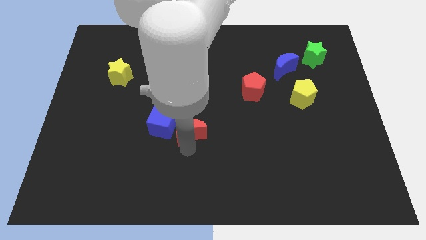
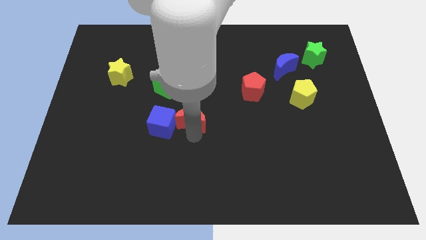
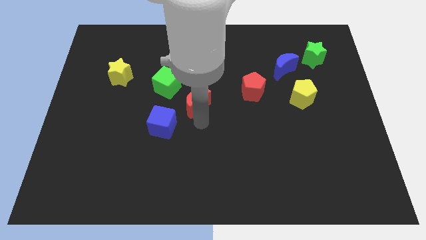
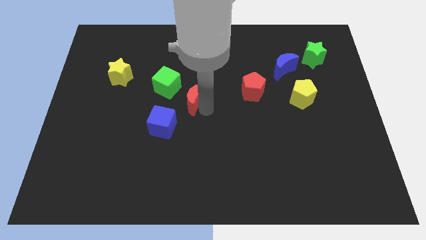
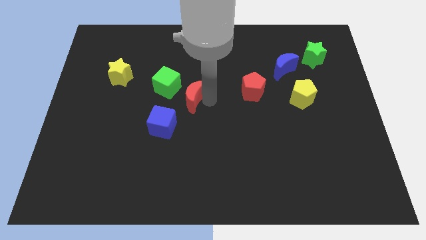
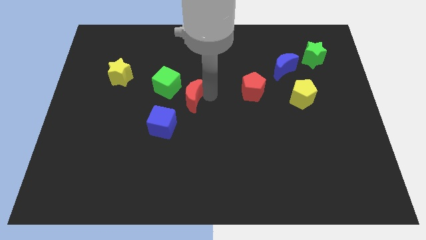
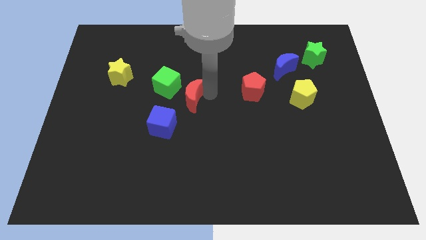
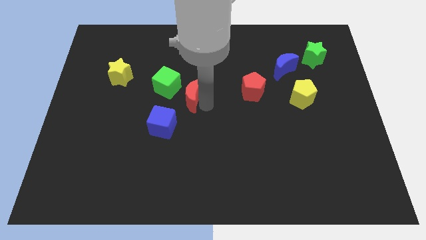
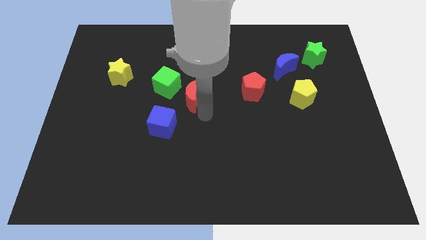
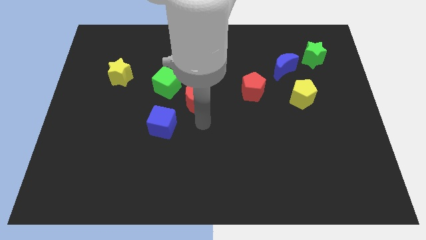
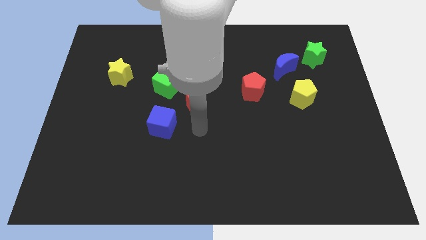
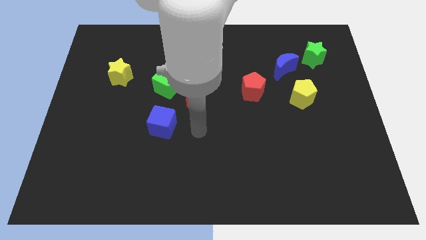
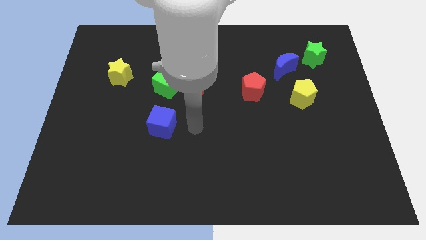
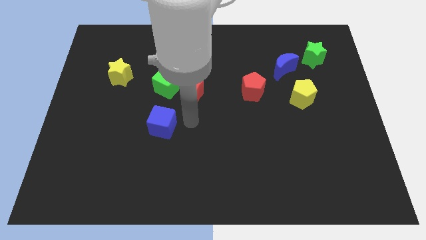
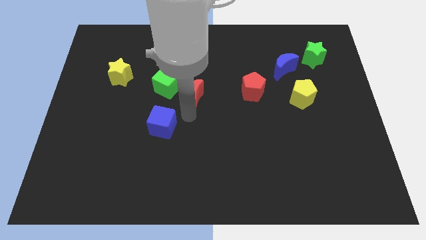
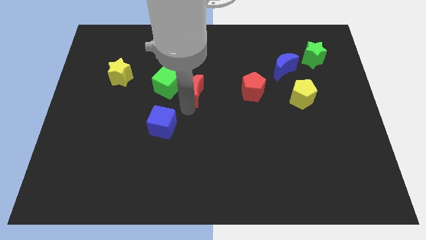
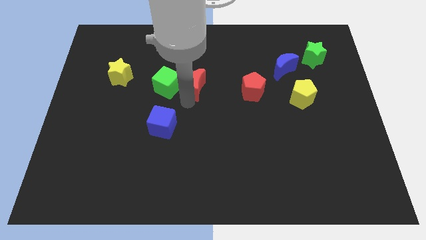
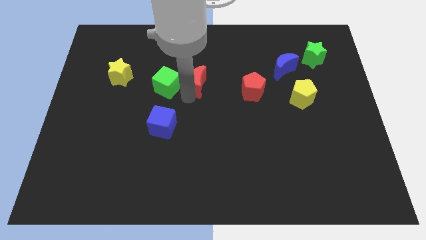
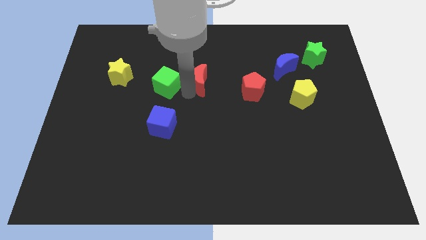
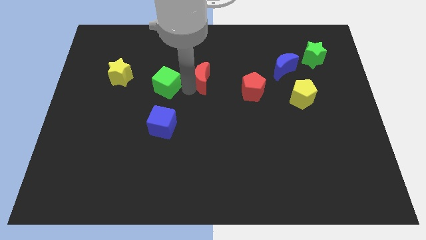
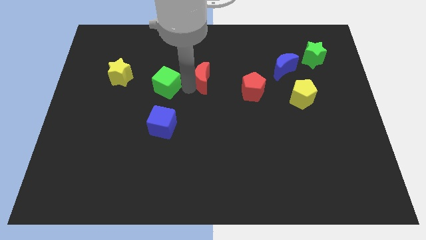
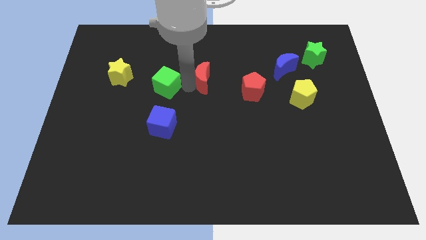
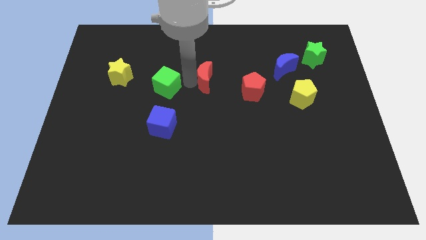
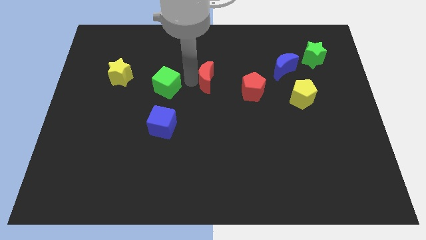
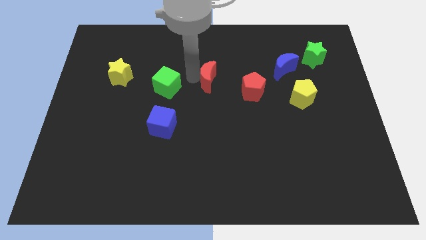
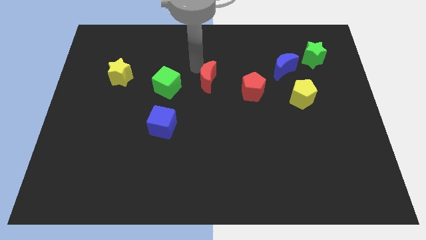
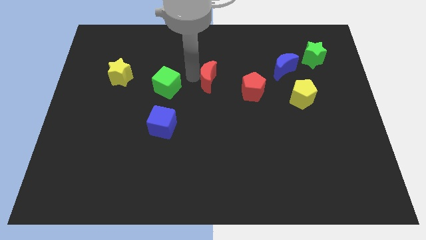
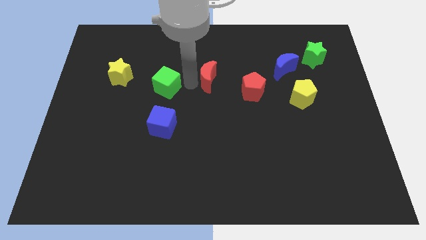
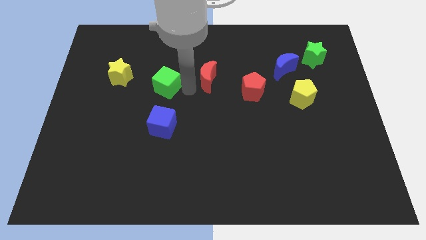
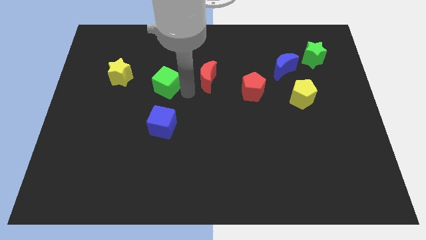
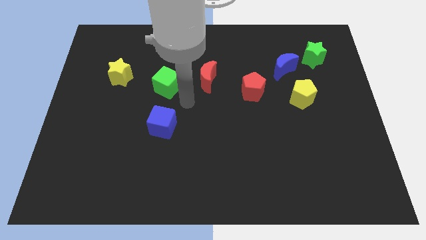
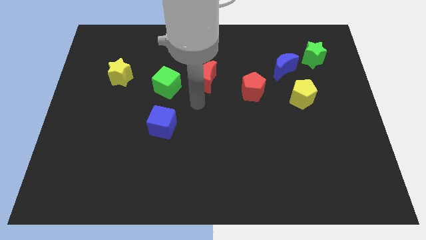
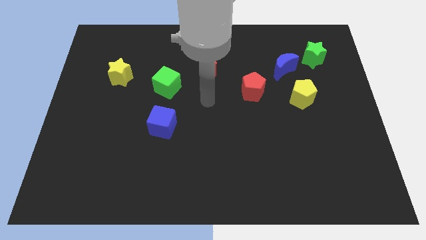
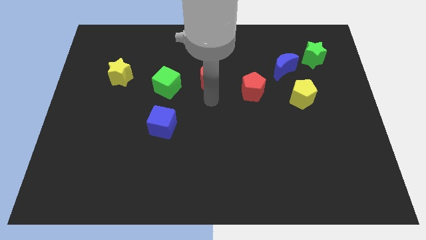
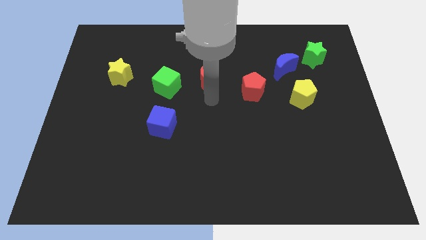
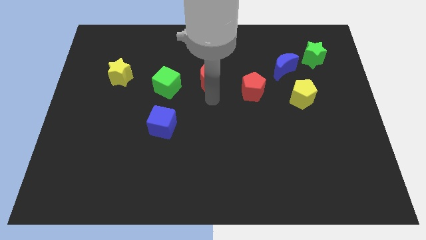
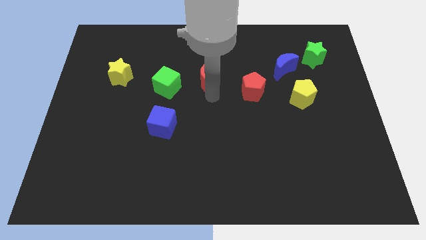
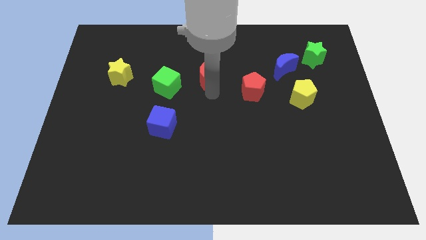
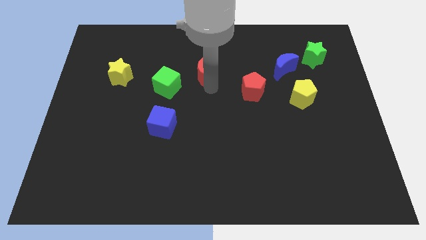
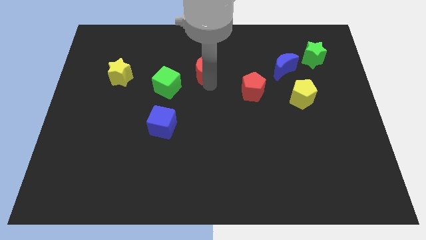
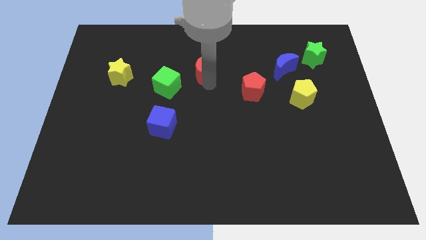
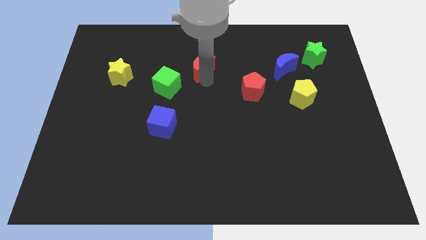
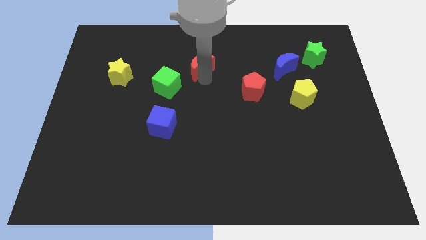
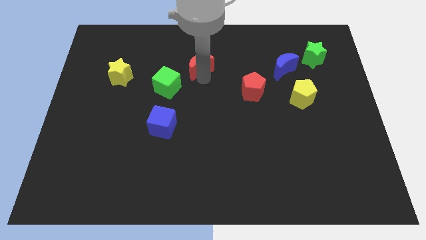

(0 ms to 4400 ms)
place the red crescent horizontally to the right side of the yellow star

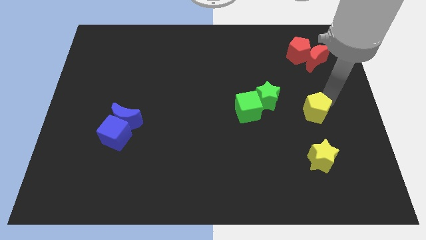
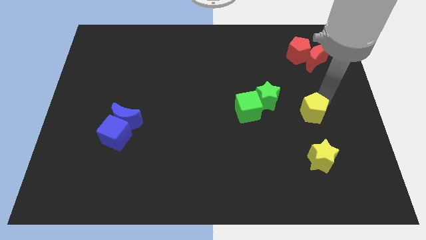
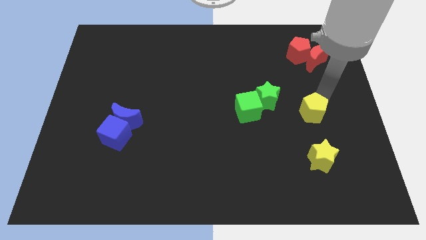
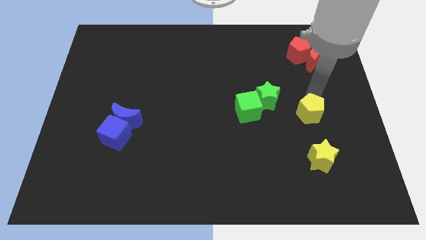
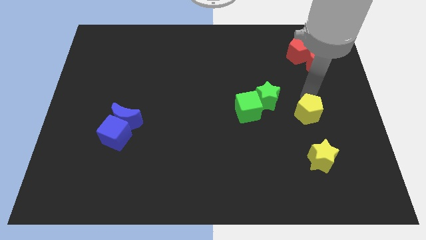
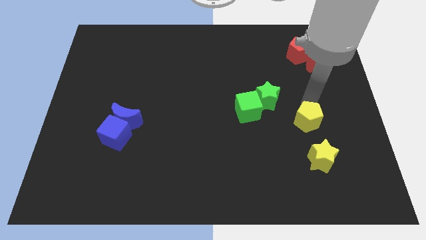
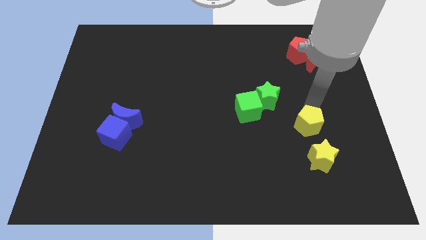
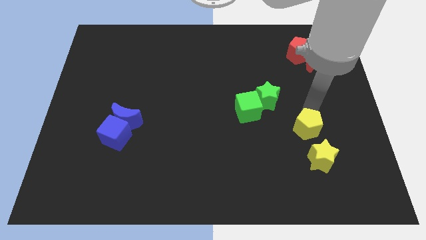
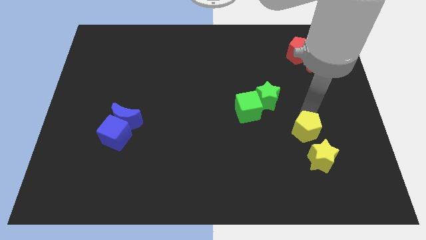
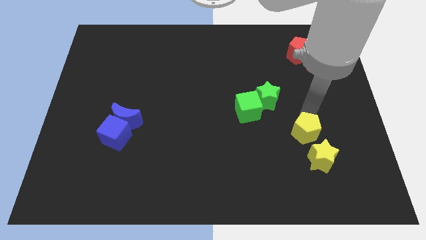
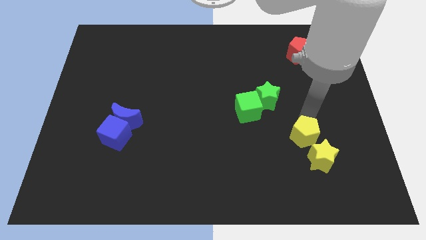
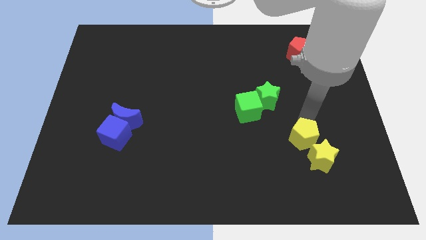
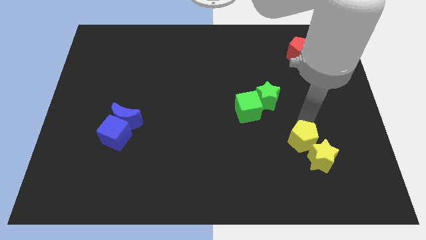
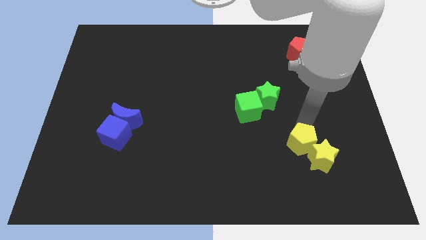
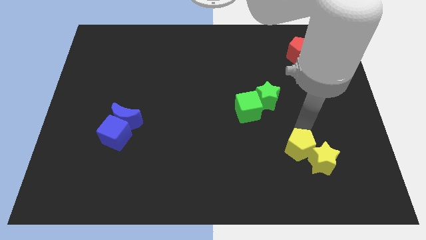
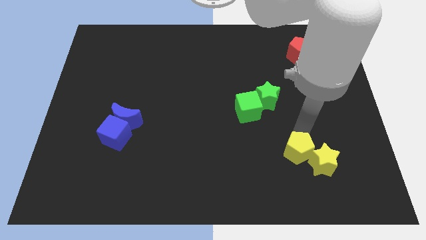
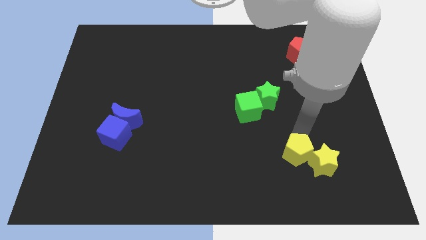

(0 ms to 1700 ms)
slide the yellow pentagon slightly towards down

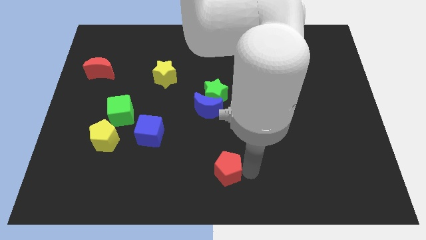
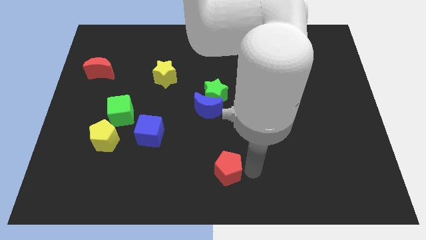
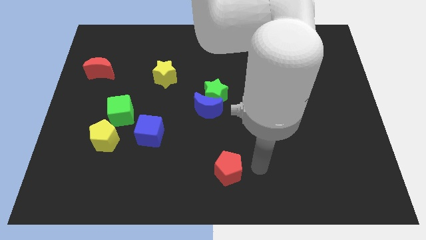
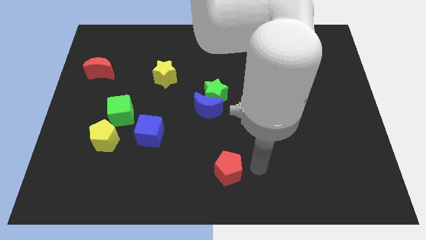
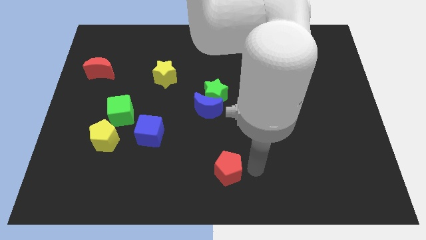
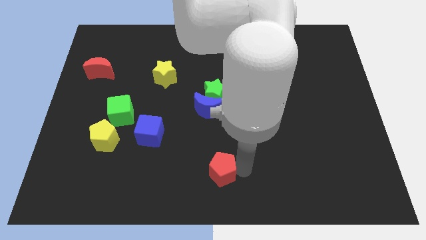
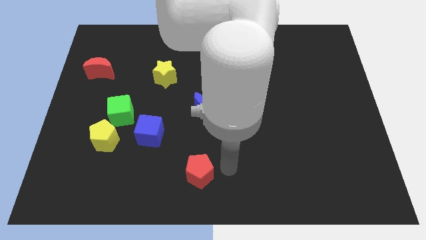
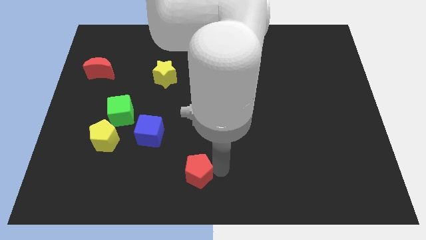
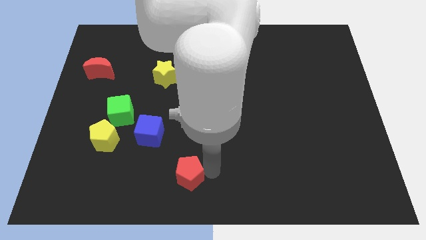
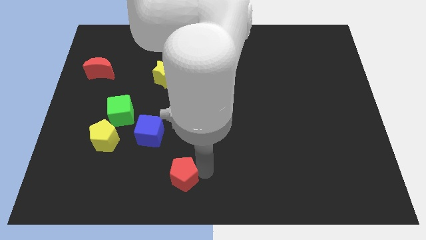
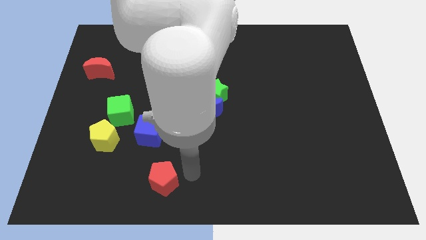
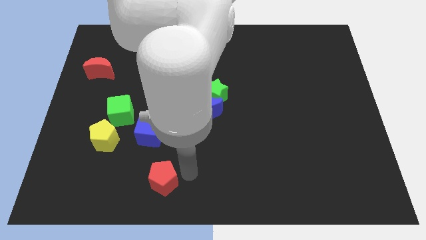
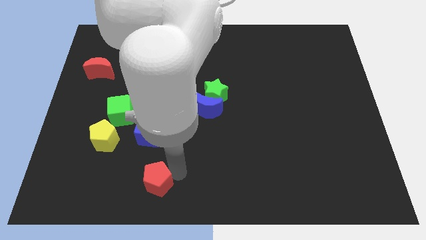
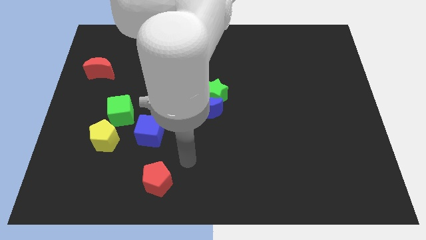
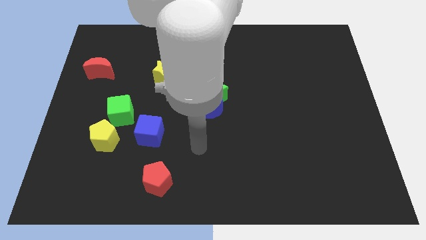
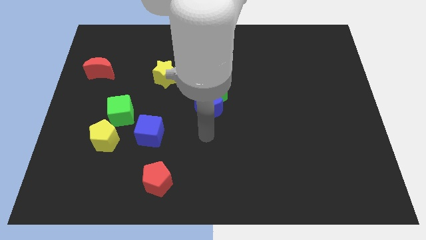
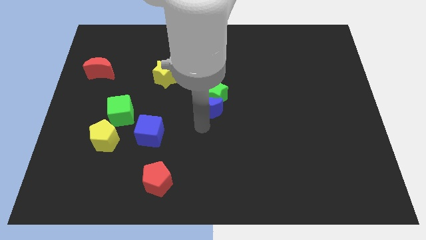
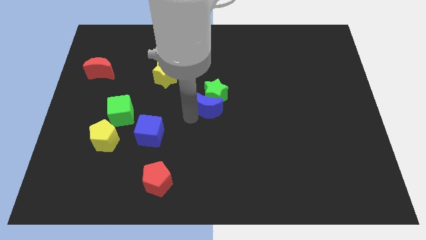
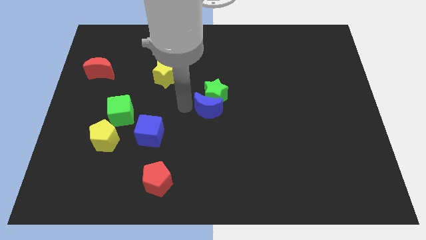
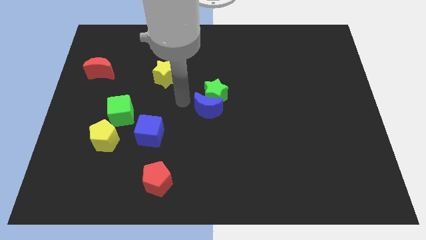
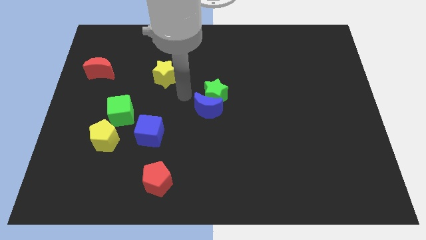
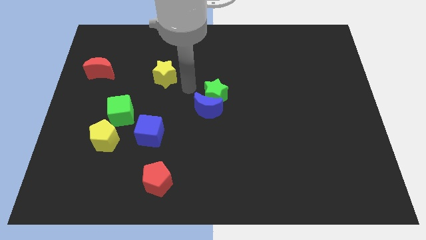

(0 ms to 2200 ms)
slide red pentagon to the bottom right of blue cube

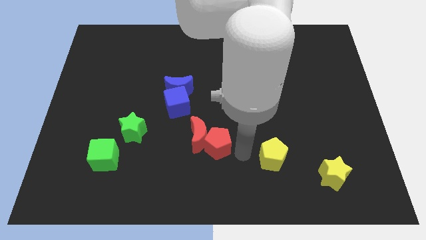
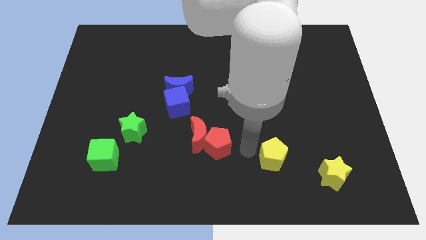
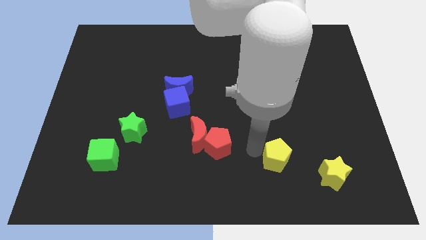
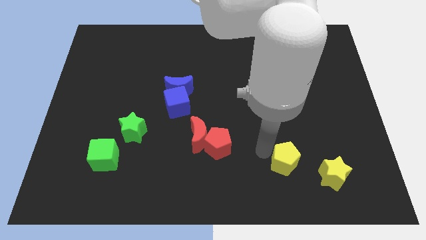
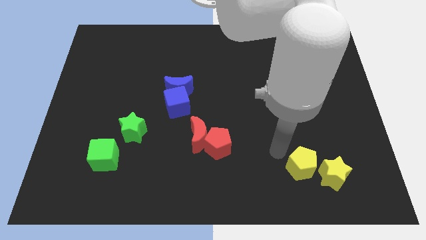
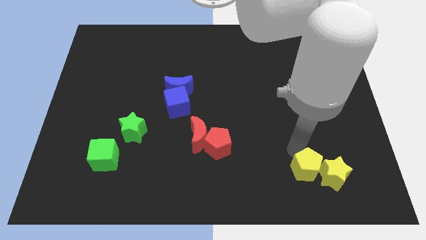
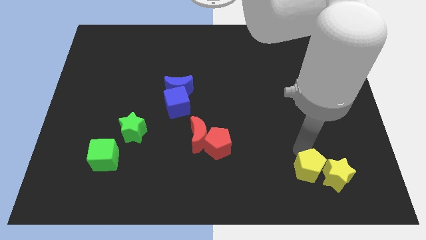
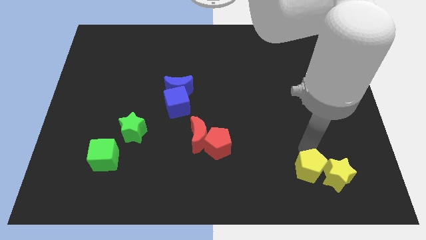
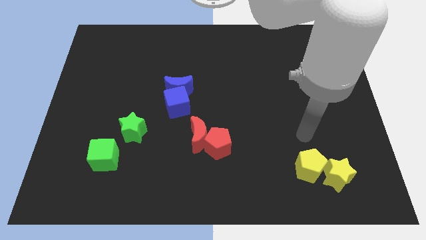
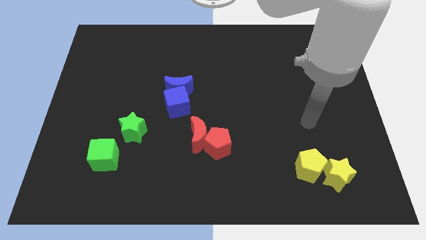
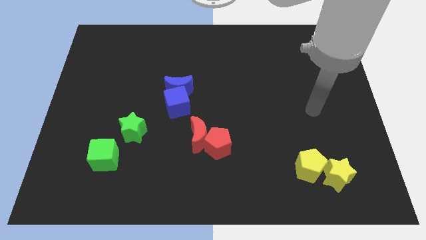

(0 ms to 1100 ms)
push the yellow pentagon into the yellow star
